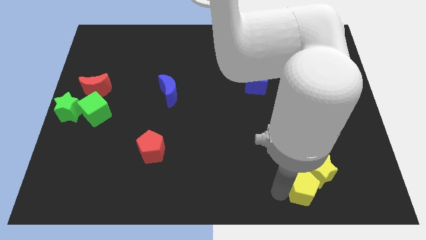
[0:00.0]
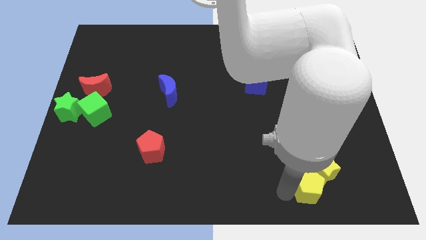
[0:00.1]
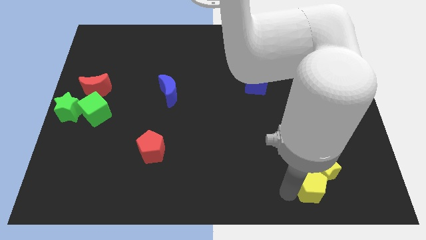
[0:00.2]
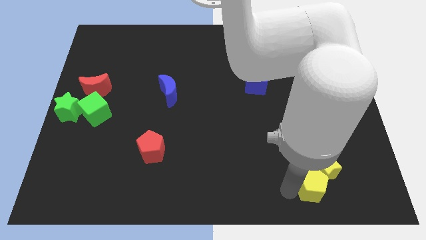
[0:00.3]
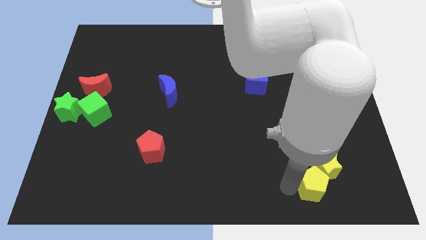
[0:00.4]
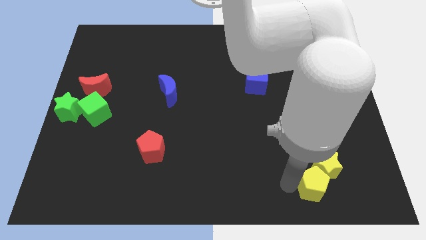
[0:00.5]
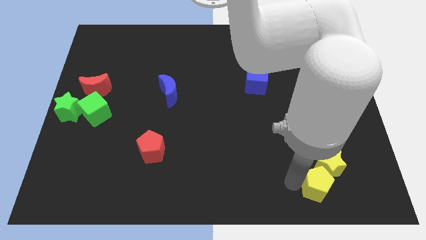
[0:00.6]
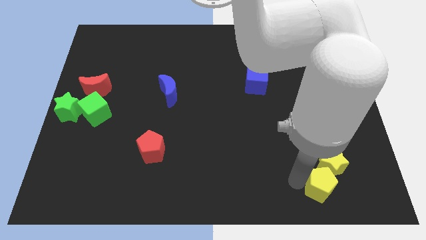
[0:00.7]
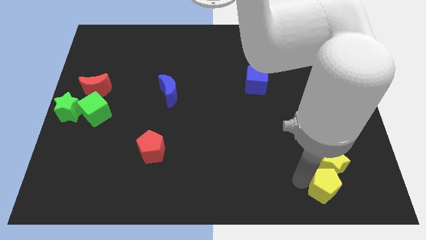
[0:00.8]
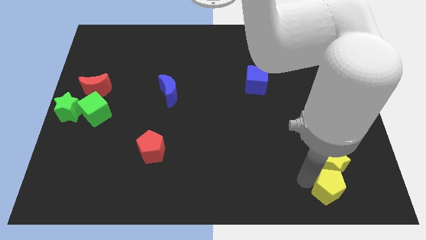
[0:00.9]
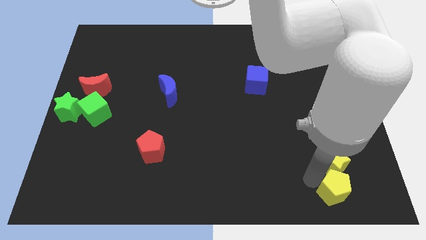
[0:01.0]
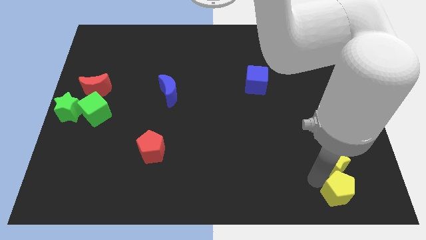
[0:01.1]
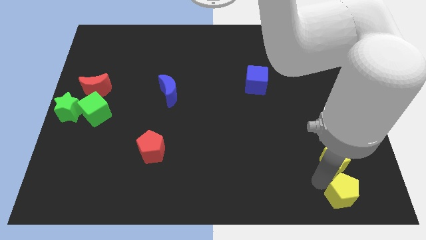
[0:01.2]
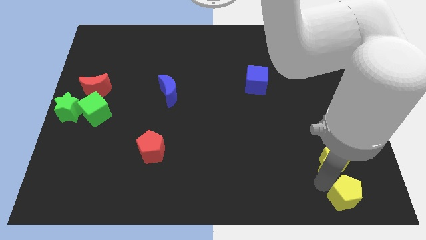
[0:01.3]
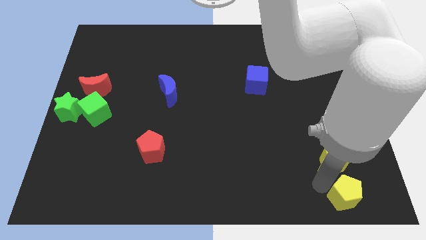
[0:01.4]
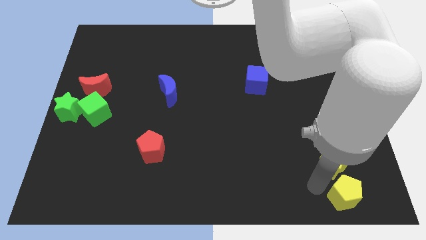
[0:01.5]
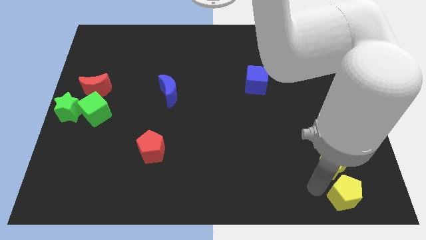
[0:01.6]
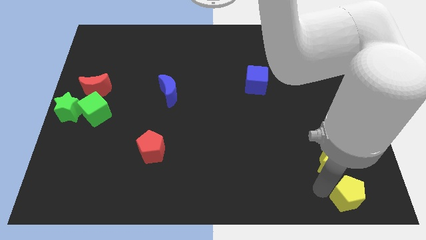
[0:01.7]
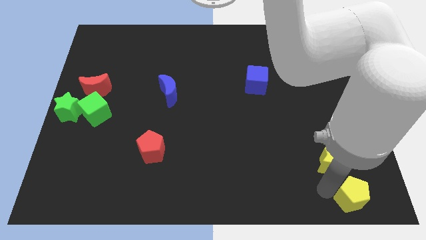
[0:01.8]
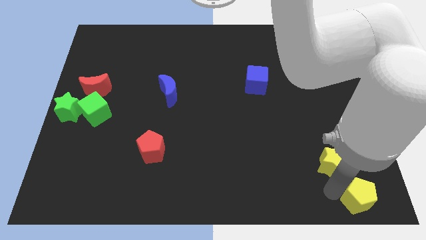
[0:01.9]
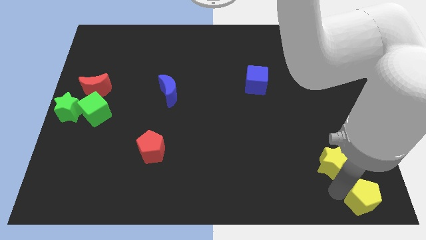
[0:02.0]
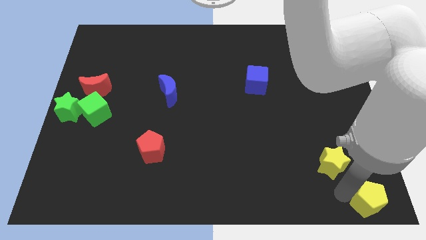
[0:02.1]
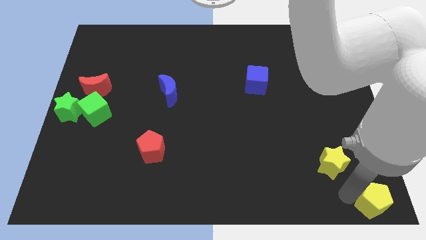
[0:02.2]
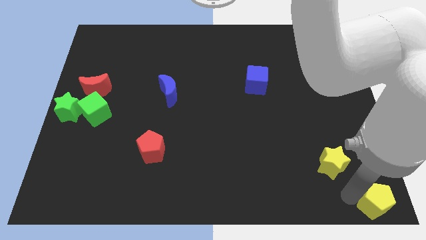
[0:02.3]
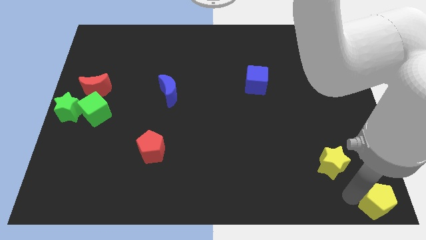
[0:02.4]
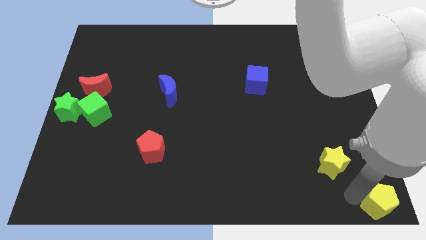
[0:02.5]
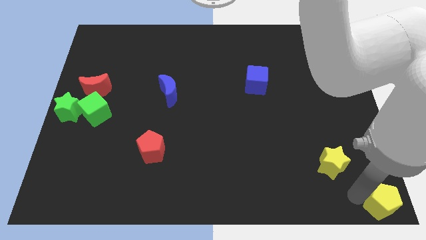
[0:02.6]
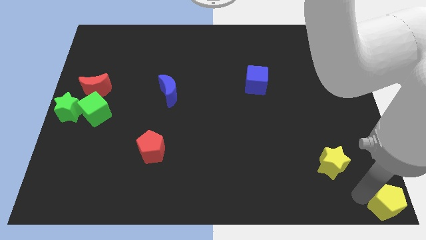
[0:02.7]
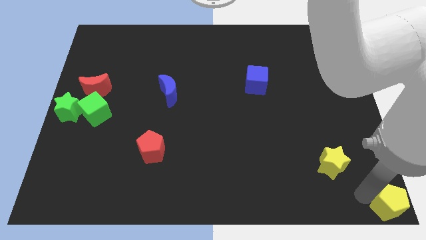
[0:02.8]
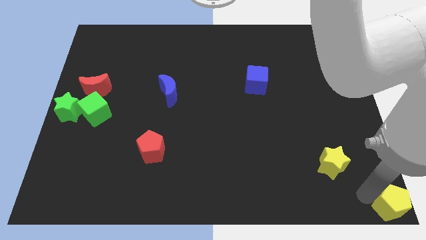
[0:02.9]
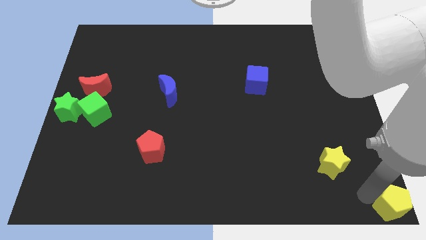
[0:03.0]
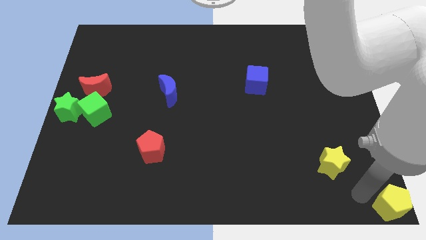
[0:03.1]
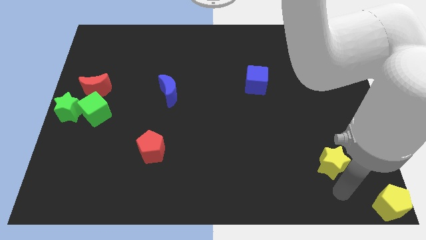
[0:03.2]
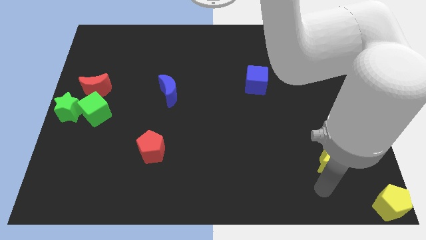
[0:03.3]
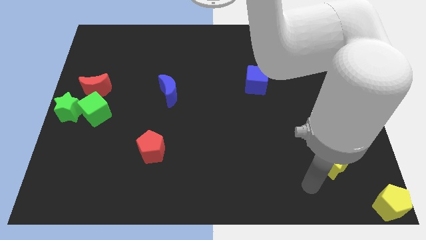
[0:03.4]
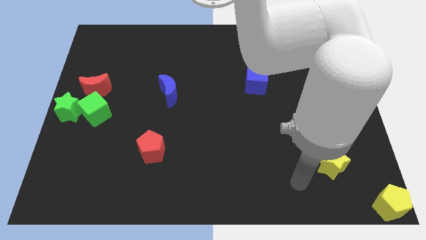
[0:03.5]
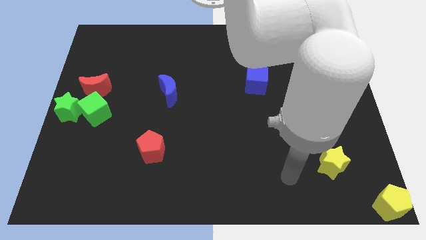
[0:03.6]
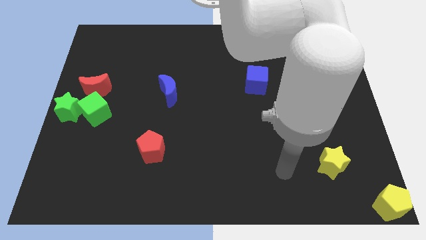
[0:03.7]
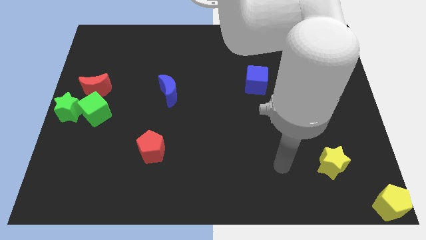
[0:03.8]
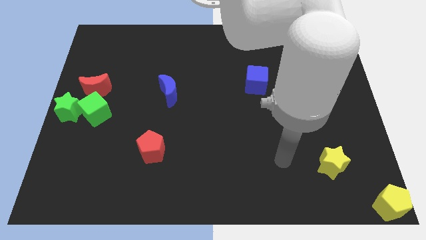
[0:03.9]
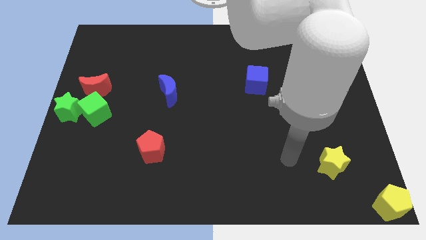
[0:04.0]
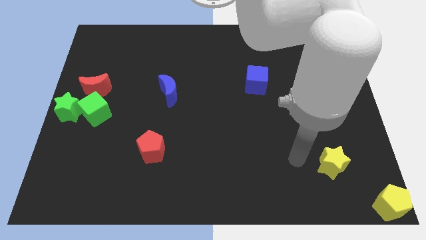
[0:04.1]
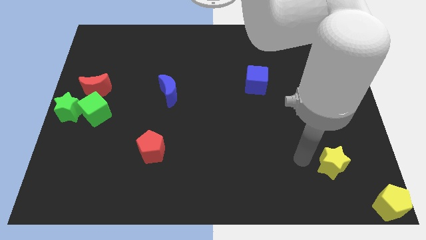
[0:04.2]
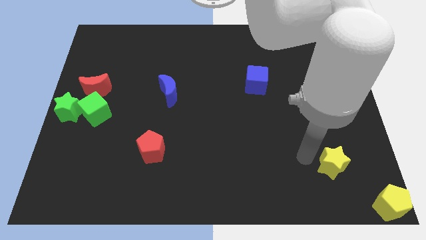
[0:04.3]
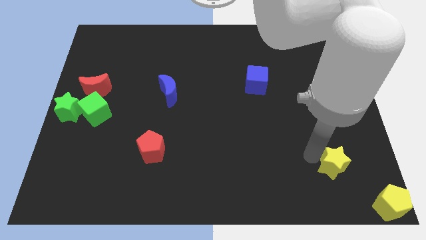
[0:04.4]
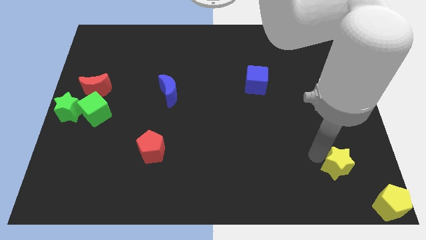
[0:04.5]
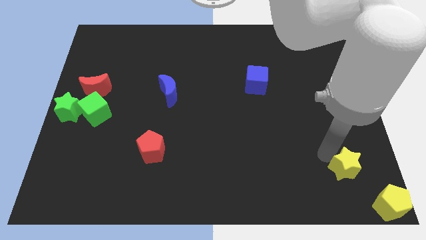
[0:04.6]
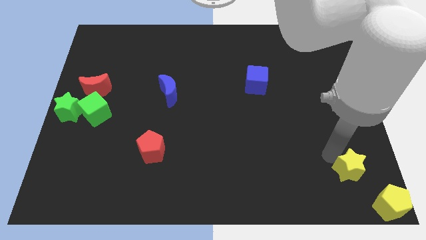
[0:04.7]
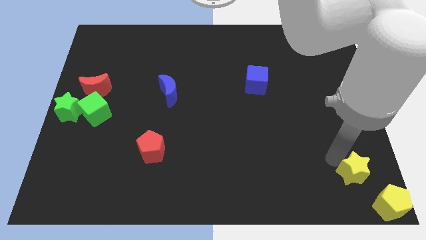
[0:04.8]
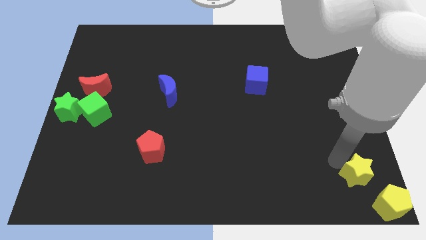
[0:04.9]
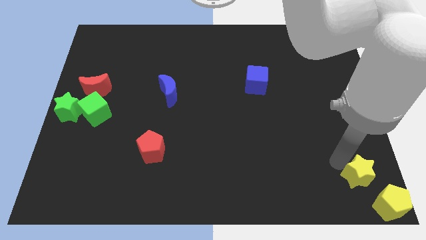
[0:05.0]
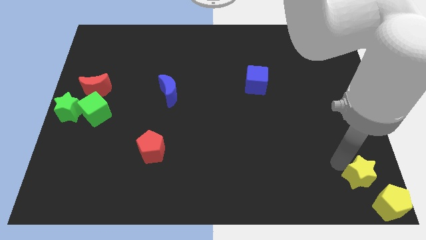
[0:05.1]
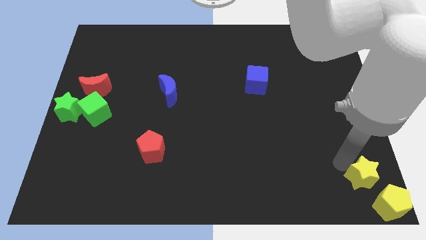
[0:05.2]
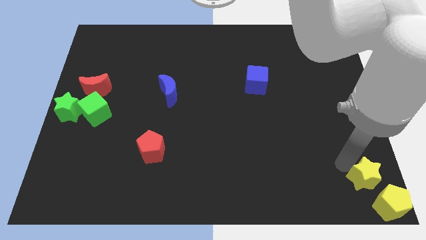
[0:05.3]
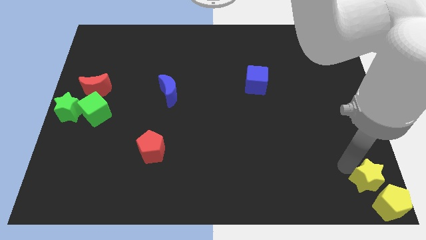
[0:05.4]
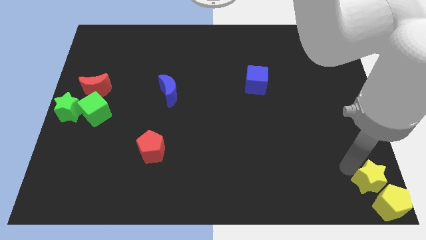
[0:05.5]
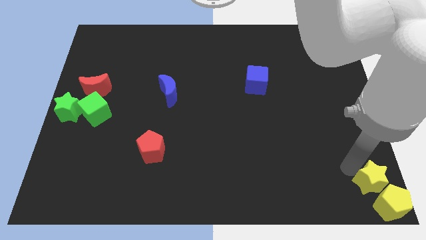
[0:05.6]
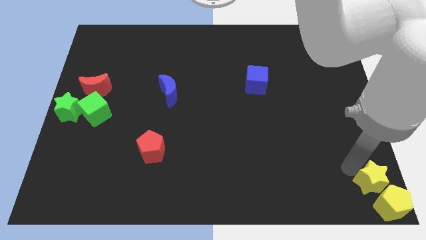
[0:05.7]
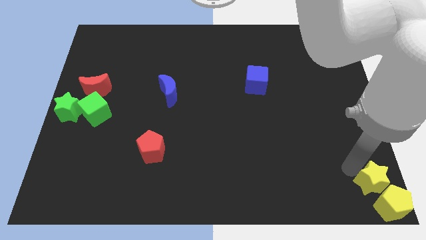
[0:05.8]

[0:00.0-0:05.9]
push the yellow blocks to the bottom right side corner of the board

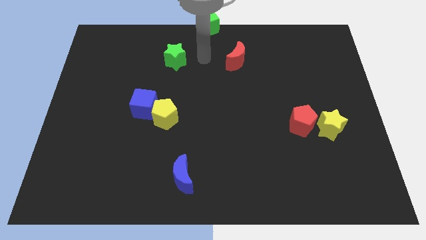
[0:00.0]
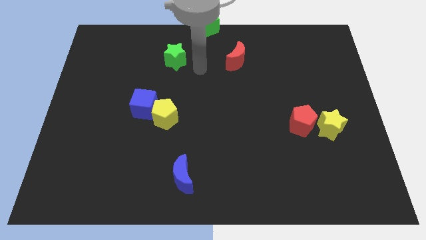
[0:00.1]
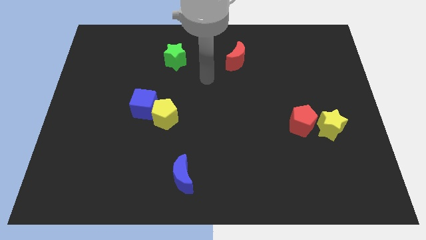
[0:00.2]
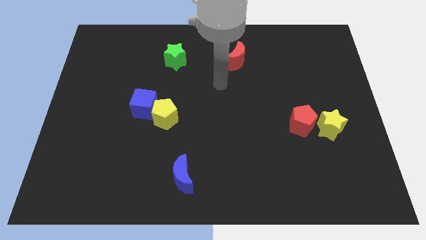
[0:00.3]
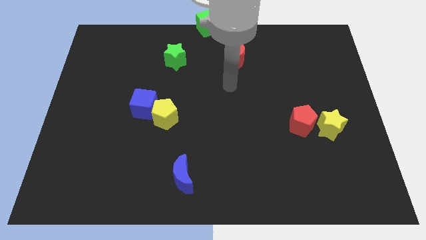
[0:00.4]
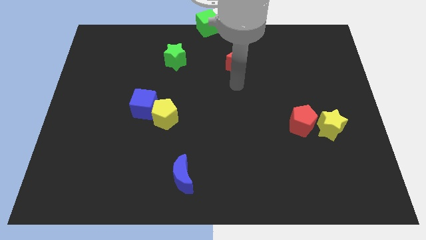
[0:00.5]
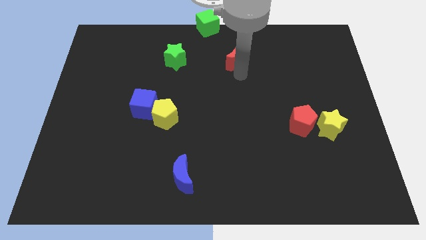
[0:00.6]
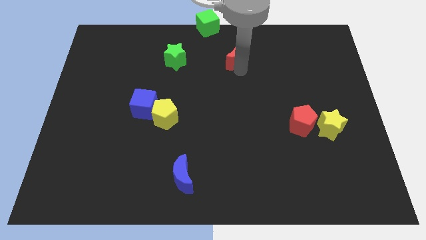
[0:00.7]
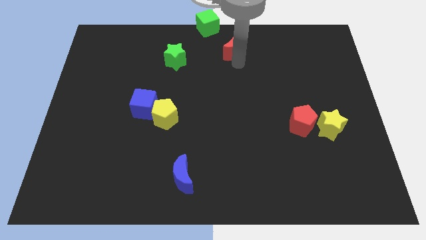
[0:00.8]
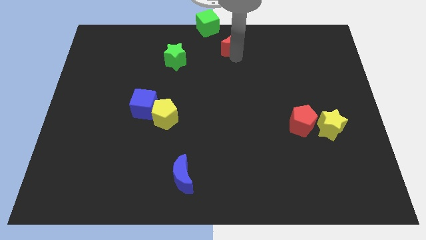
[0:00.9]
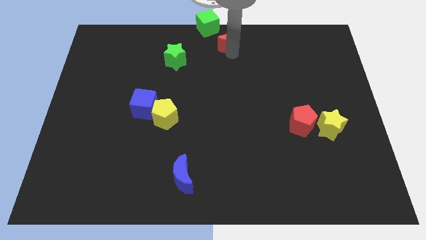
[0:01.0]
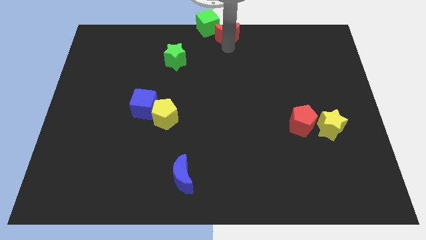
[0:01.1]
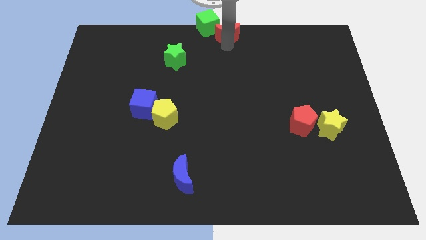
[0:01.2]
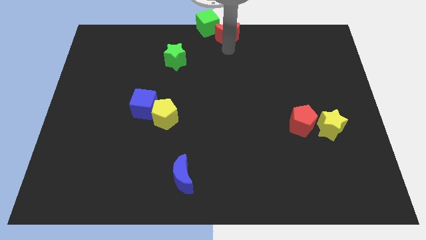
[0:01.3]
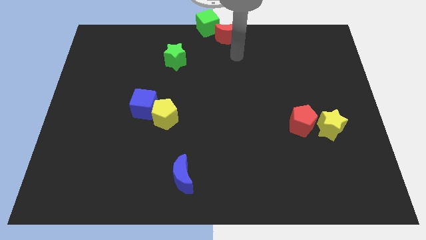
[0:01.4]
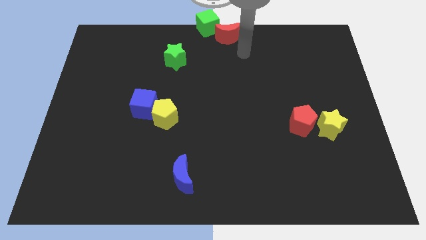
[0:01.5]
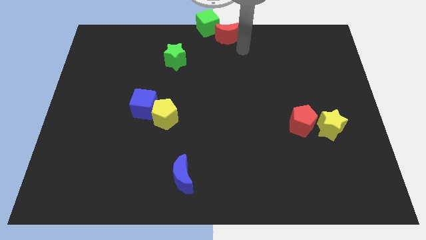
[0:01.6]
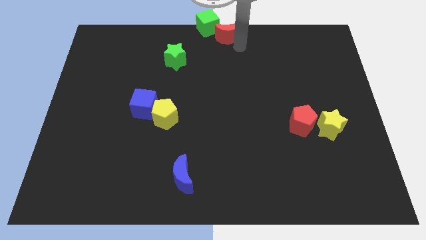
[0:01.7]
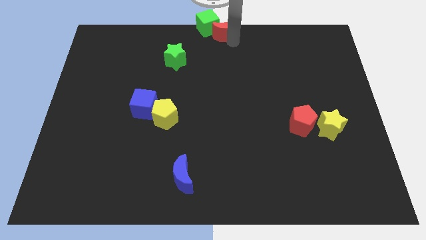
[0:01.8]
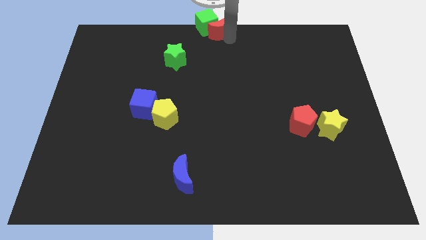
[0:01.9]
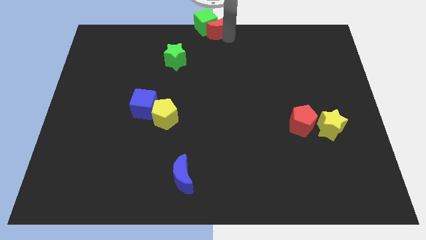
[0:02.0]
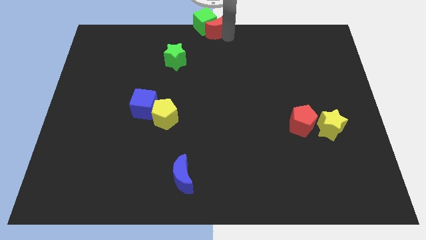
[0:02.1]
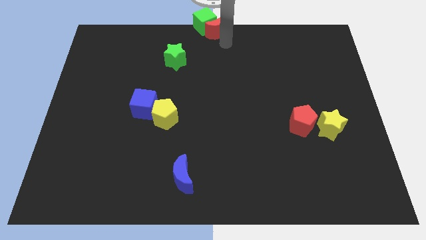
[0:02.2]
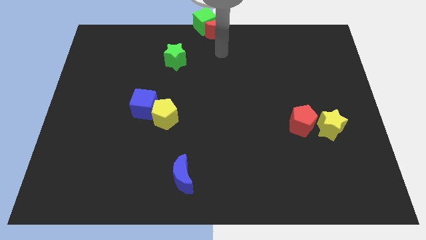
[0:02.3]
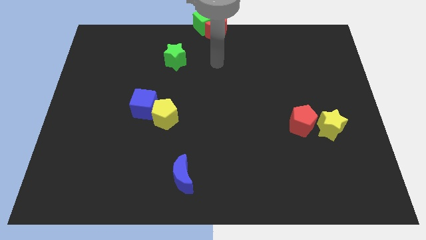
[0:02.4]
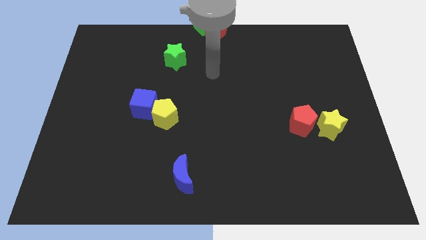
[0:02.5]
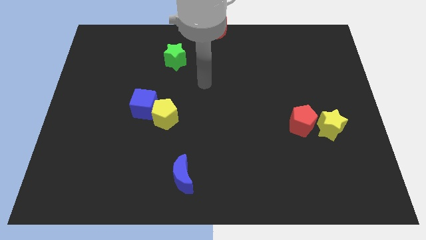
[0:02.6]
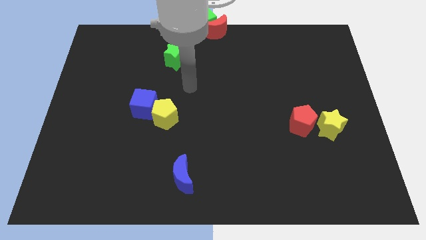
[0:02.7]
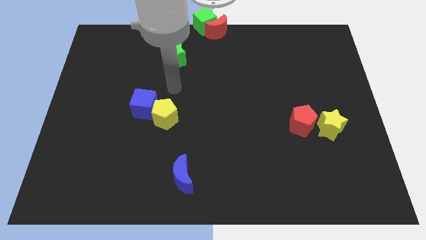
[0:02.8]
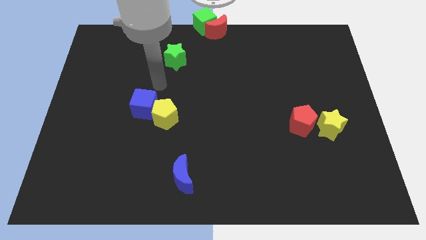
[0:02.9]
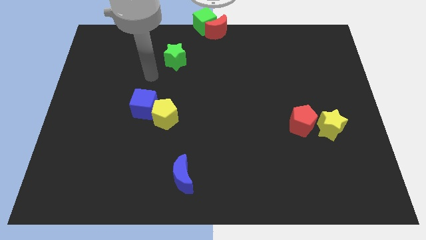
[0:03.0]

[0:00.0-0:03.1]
place the red crescent at the bottom of the green cube
